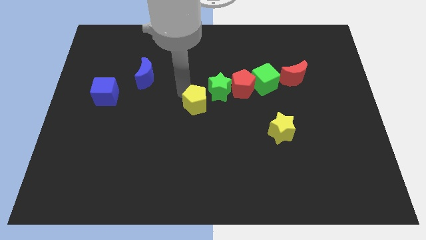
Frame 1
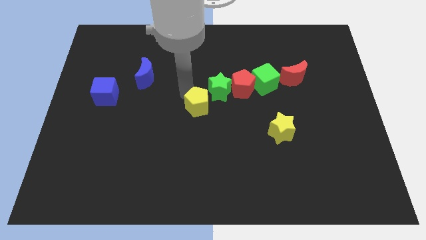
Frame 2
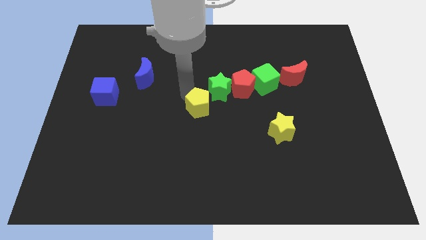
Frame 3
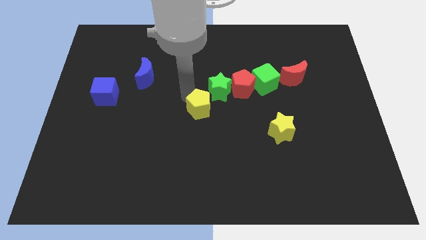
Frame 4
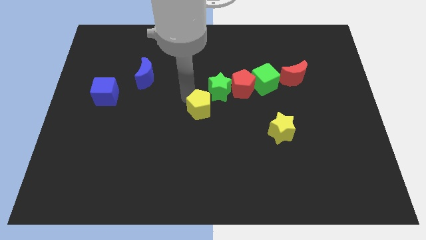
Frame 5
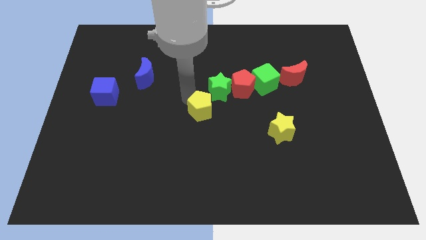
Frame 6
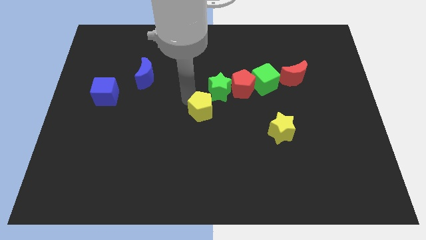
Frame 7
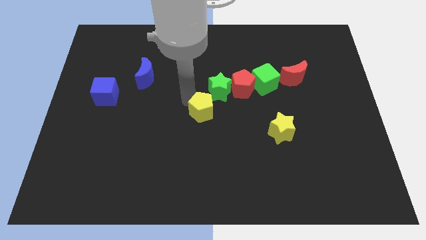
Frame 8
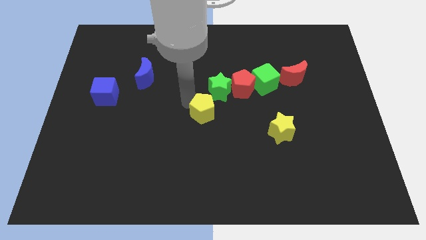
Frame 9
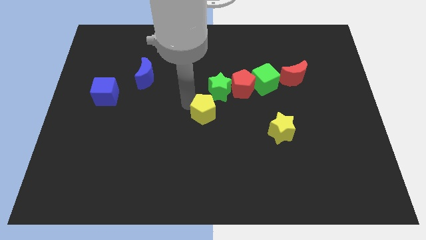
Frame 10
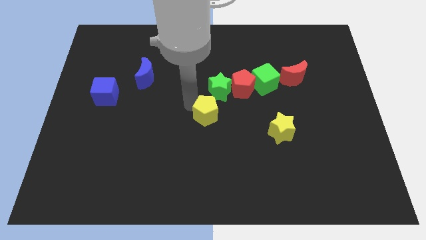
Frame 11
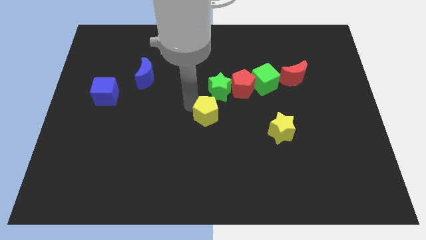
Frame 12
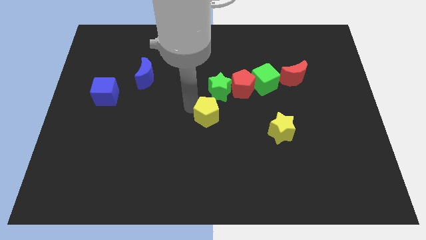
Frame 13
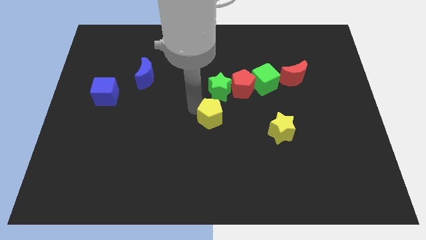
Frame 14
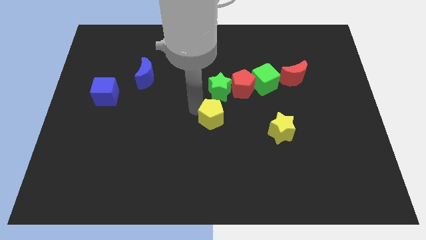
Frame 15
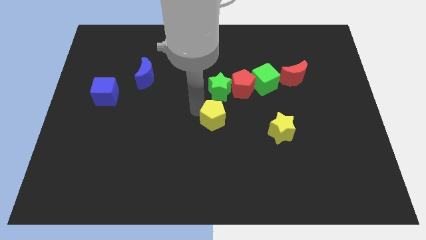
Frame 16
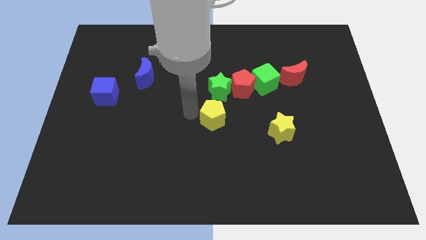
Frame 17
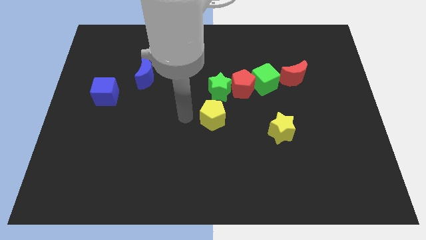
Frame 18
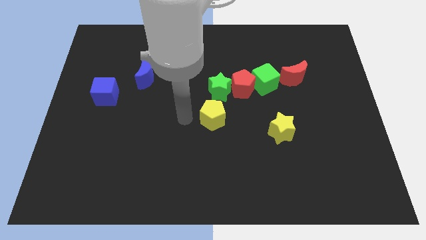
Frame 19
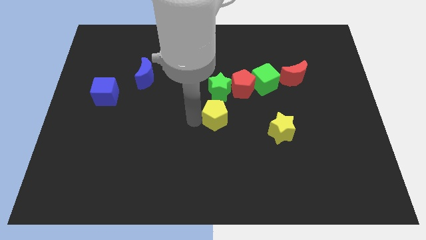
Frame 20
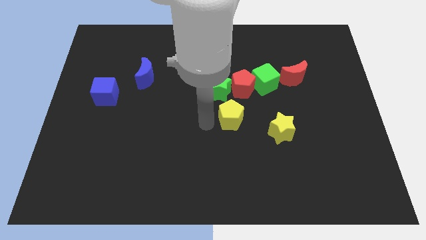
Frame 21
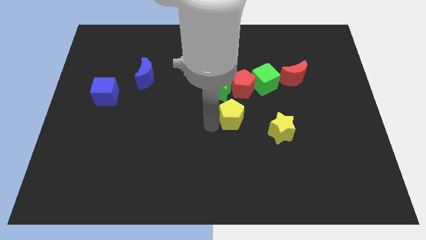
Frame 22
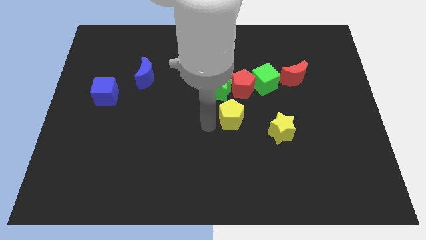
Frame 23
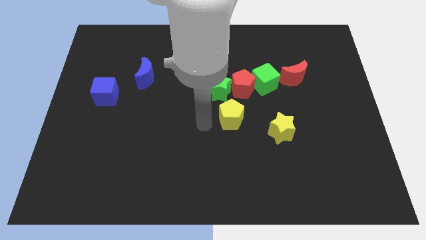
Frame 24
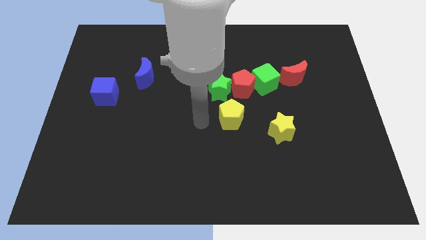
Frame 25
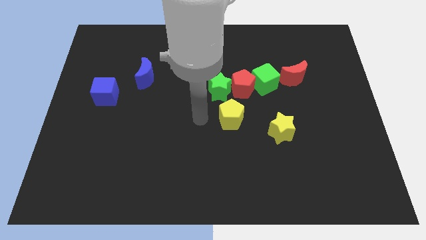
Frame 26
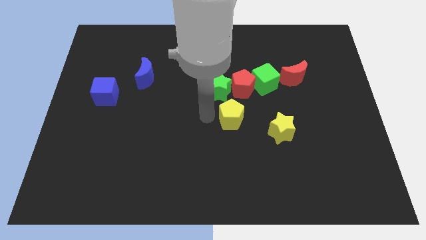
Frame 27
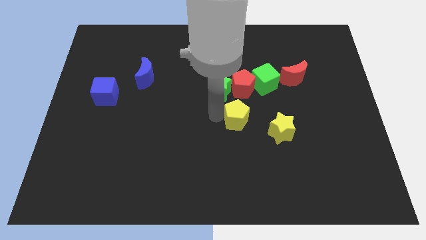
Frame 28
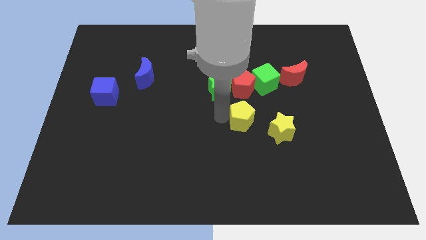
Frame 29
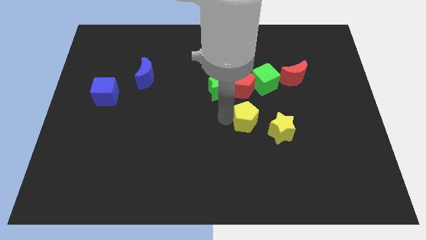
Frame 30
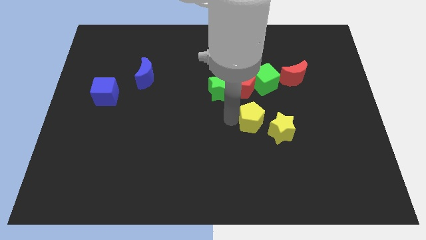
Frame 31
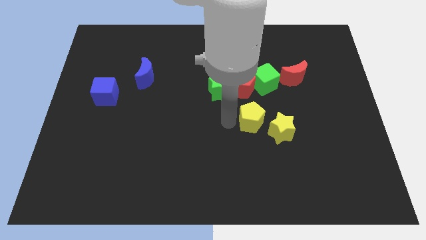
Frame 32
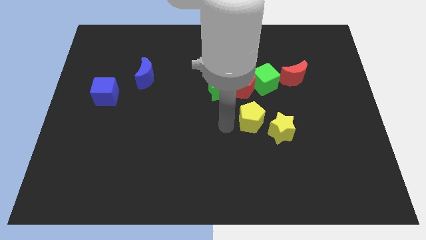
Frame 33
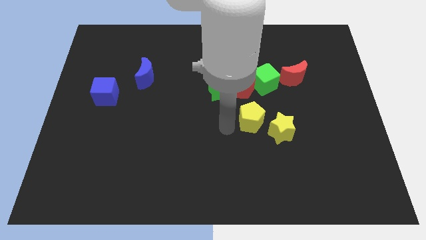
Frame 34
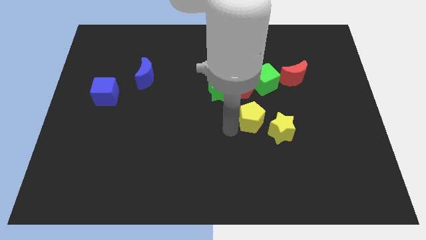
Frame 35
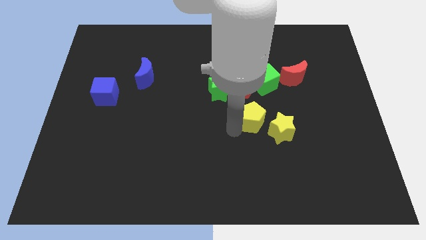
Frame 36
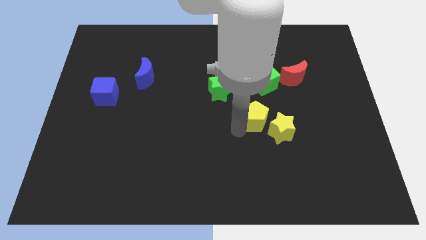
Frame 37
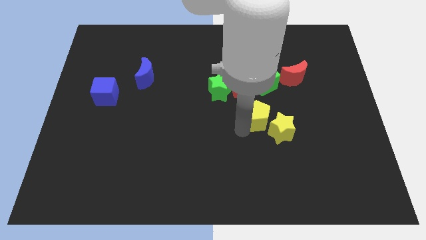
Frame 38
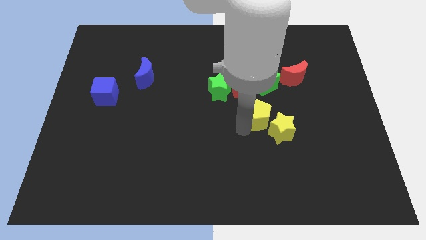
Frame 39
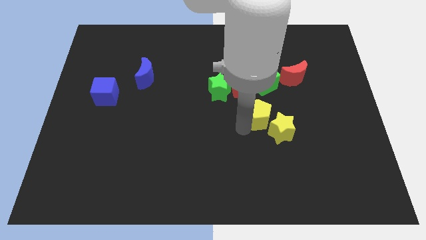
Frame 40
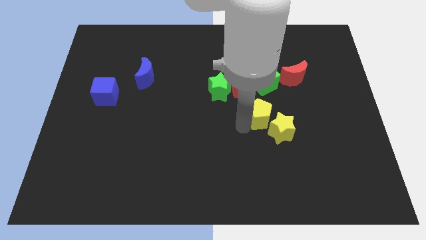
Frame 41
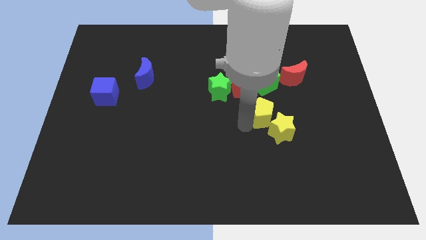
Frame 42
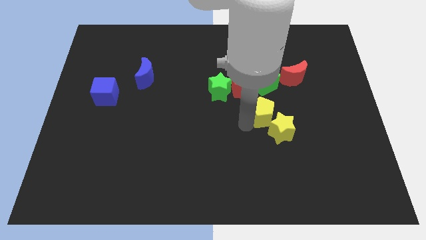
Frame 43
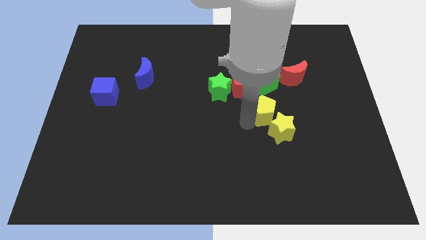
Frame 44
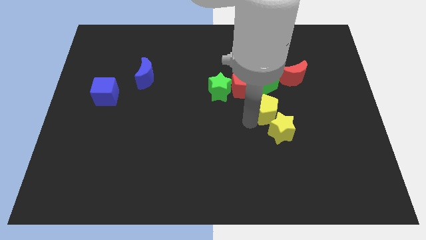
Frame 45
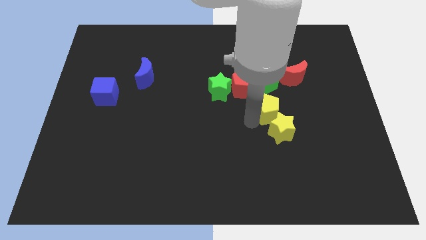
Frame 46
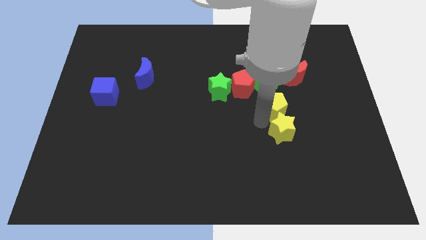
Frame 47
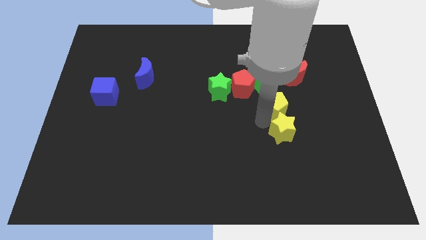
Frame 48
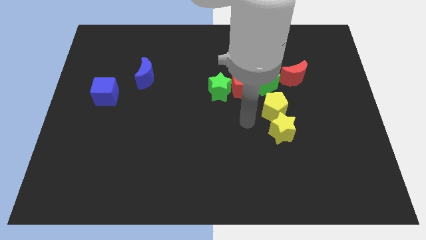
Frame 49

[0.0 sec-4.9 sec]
place the yellow pentagon on top of the yellow star

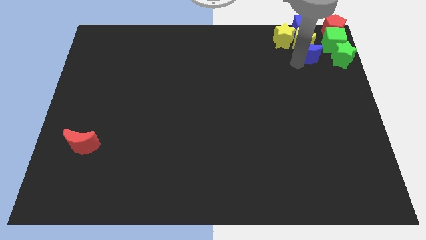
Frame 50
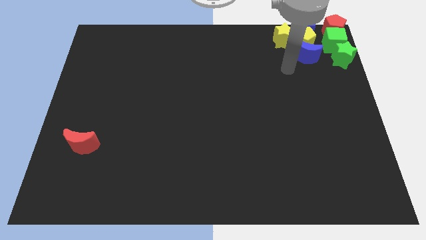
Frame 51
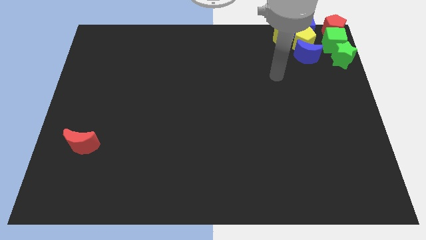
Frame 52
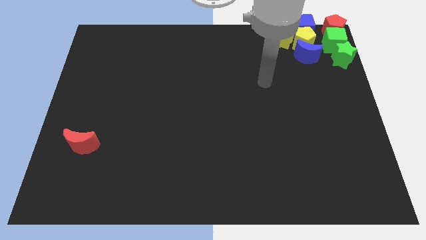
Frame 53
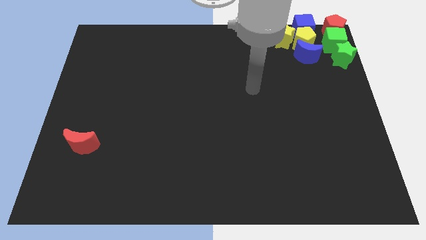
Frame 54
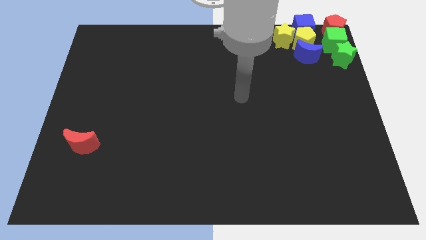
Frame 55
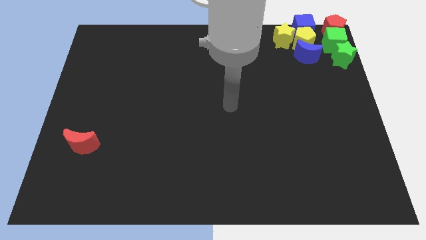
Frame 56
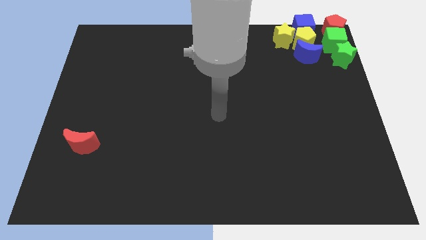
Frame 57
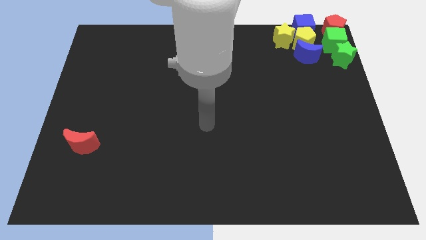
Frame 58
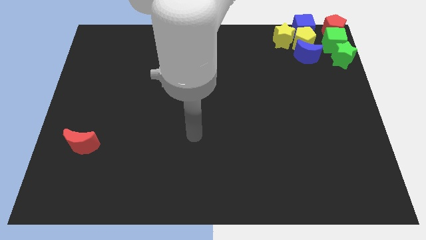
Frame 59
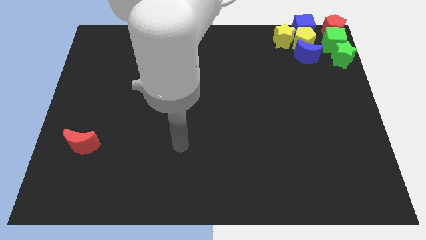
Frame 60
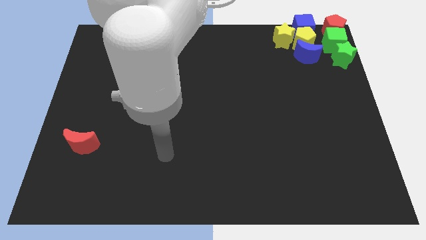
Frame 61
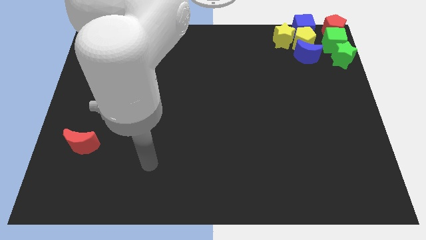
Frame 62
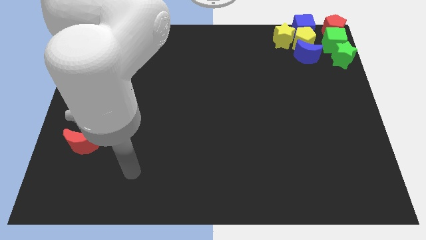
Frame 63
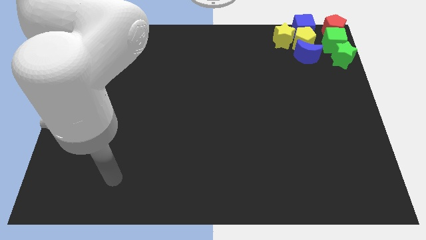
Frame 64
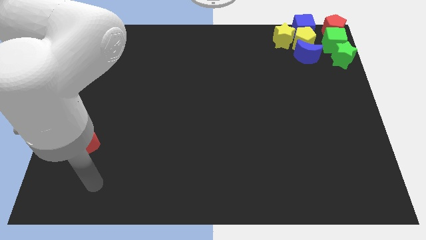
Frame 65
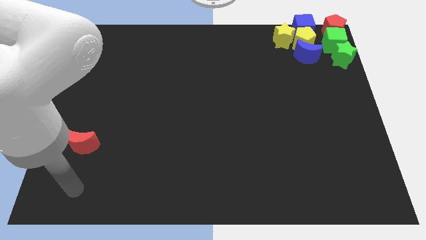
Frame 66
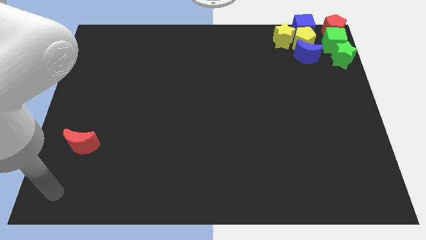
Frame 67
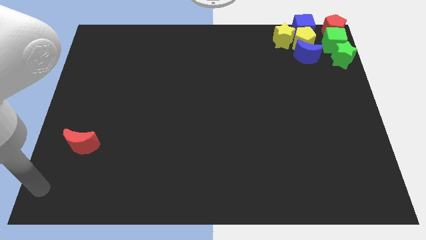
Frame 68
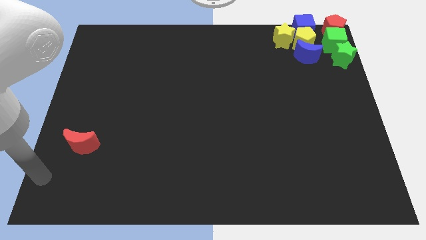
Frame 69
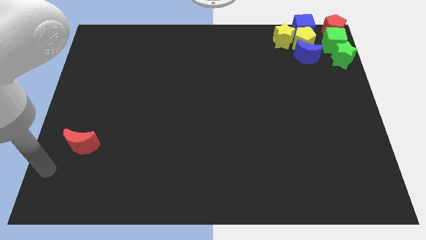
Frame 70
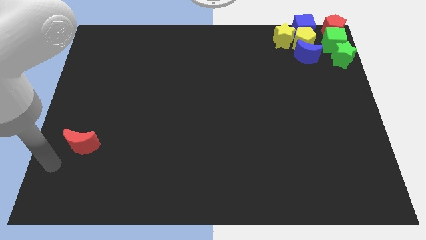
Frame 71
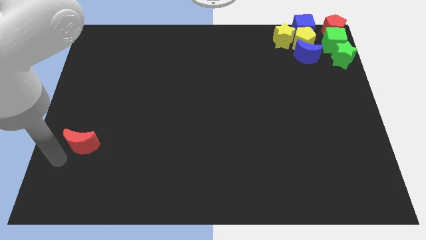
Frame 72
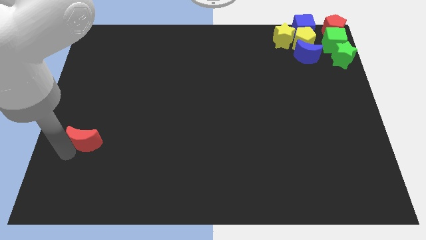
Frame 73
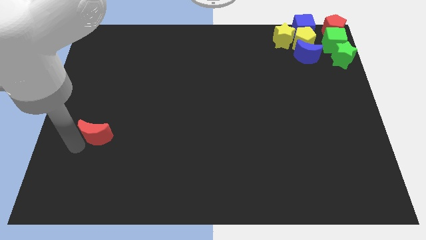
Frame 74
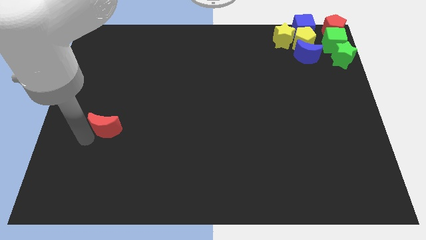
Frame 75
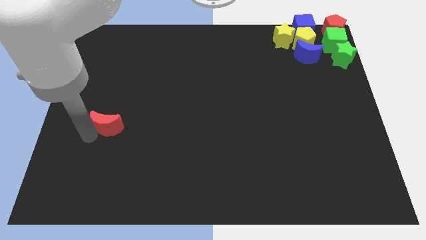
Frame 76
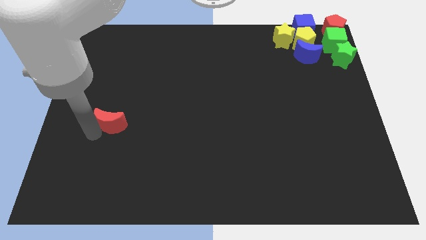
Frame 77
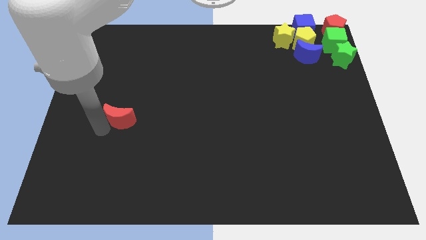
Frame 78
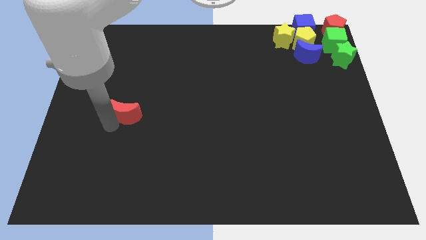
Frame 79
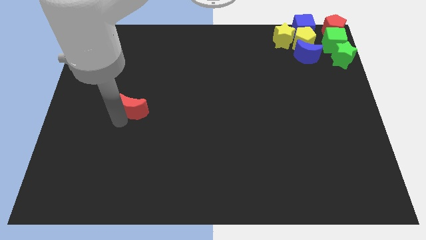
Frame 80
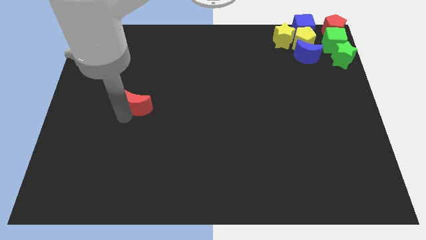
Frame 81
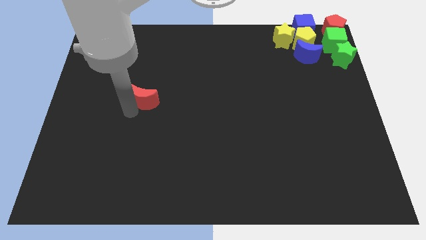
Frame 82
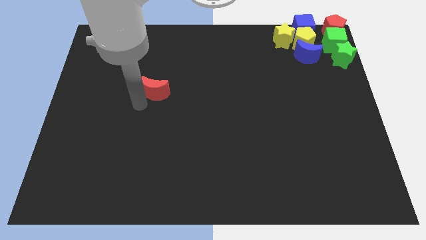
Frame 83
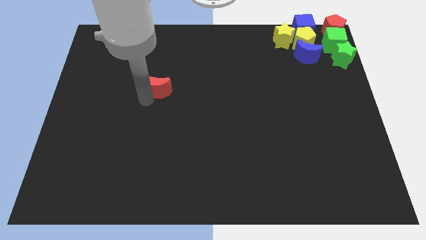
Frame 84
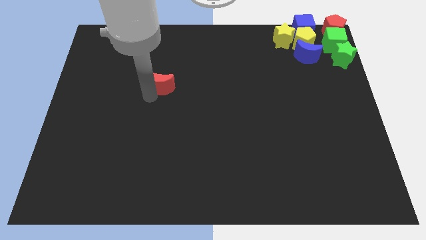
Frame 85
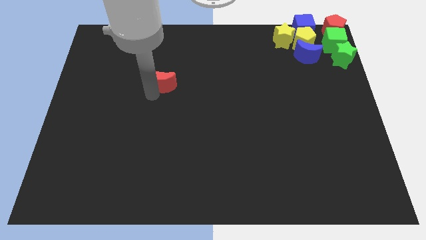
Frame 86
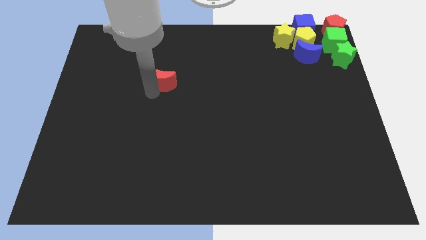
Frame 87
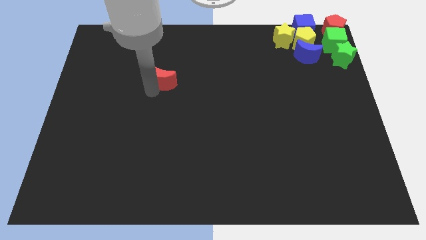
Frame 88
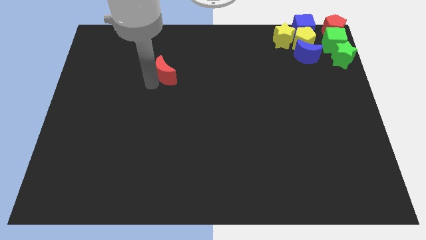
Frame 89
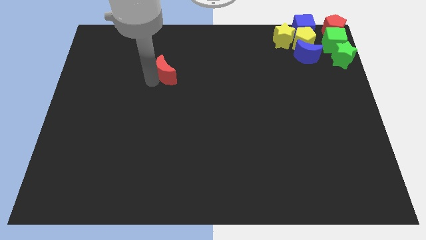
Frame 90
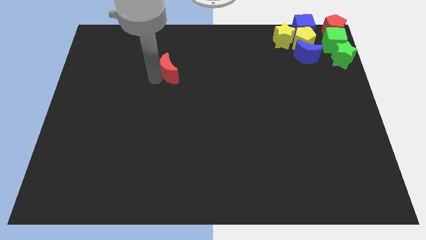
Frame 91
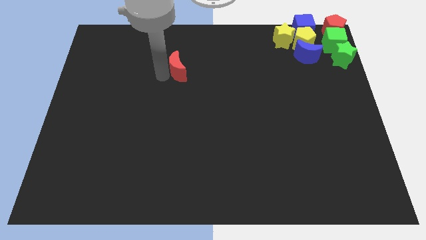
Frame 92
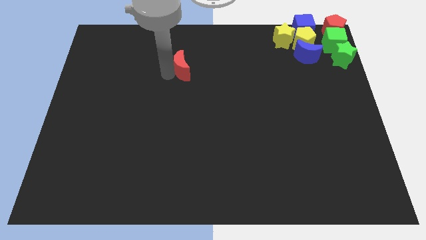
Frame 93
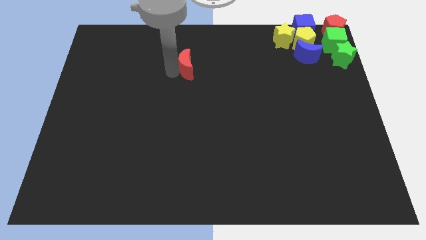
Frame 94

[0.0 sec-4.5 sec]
push the red crescent to the top
